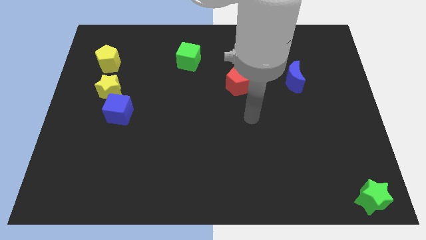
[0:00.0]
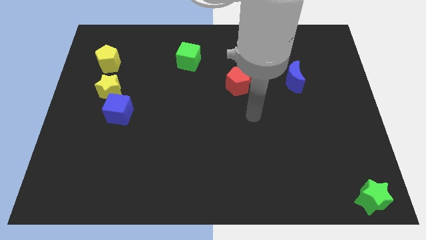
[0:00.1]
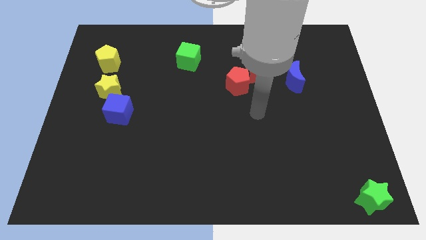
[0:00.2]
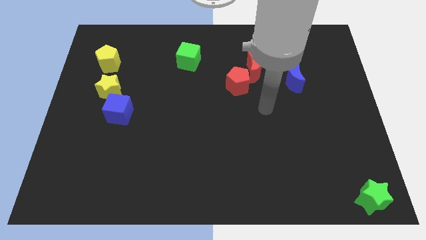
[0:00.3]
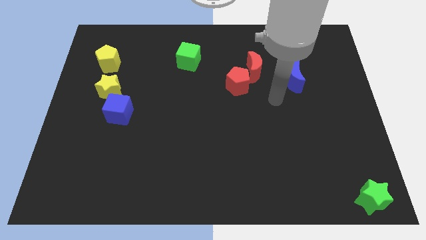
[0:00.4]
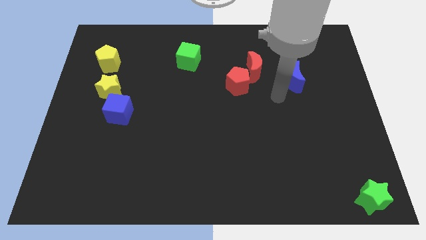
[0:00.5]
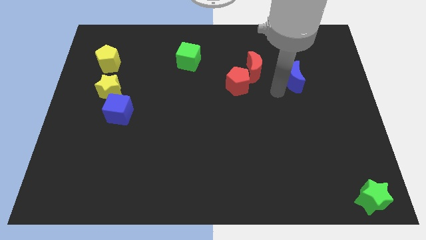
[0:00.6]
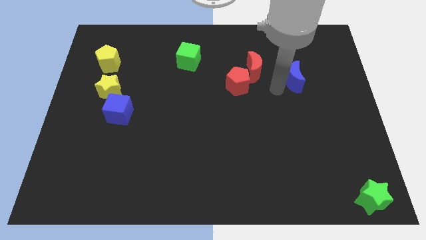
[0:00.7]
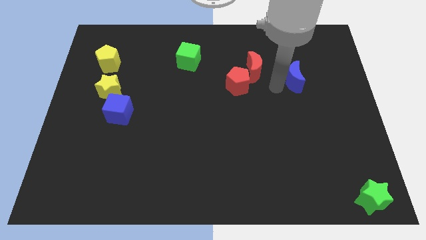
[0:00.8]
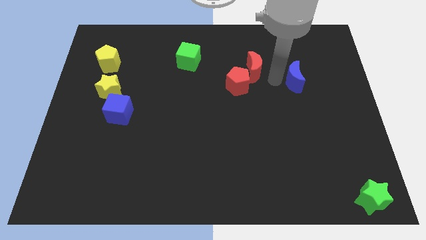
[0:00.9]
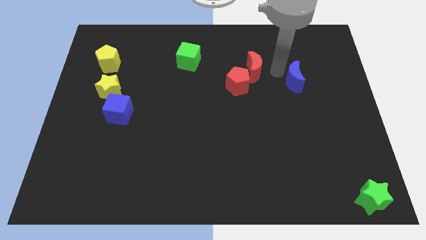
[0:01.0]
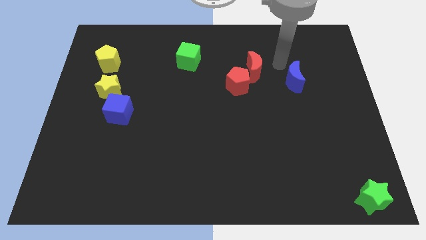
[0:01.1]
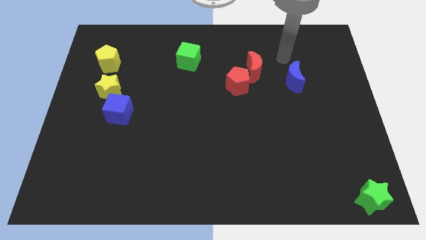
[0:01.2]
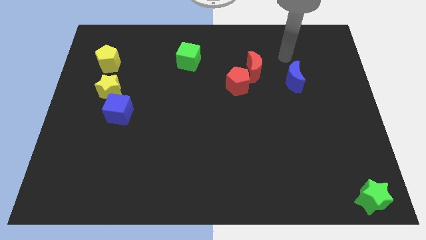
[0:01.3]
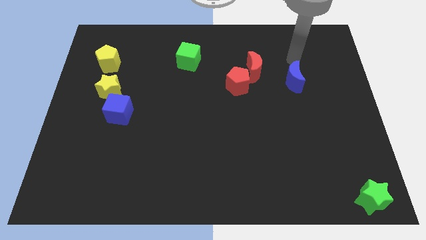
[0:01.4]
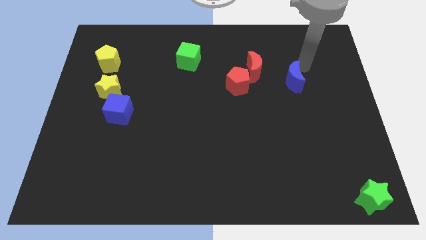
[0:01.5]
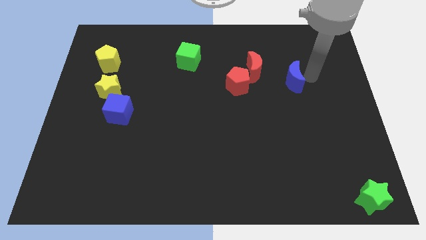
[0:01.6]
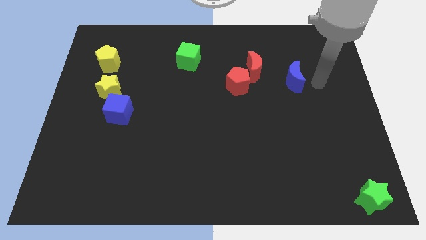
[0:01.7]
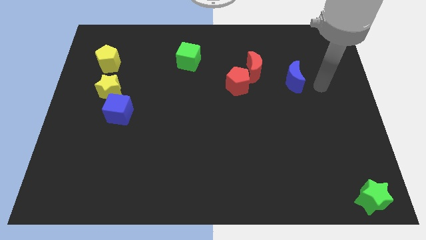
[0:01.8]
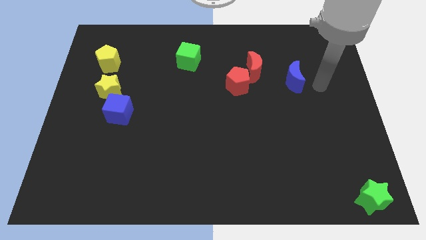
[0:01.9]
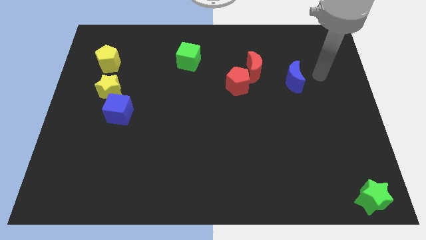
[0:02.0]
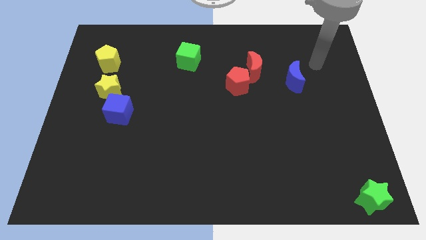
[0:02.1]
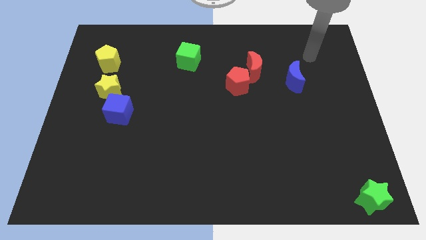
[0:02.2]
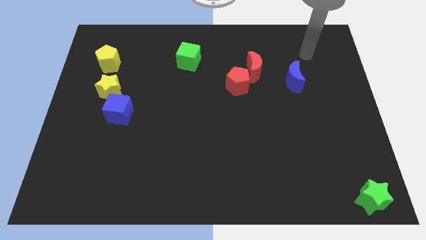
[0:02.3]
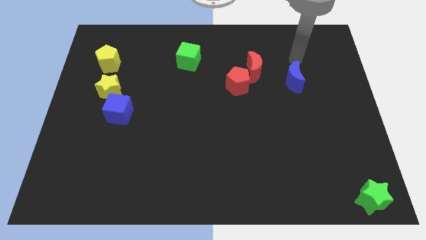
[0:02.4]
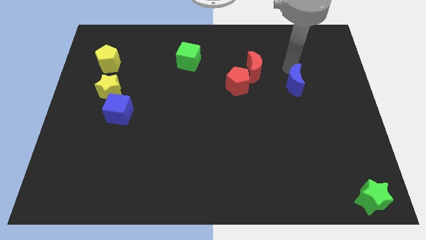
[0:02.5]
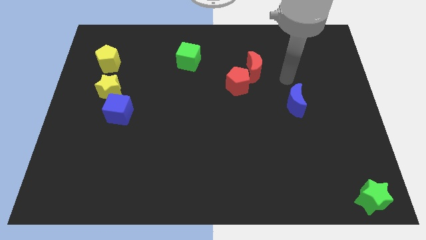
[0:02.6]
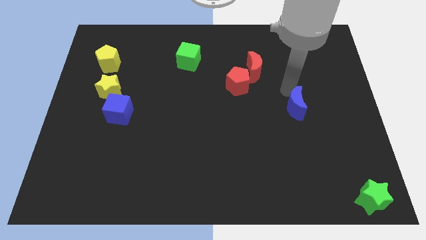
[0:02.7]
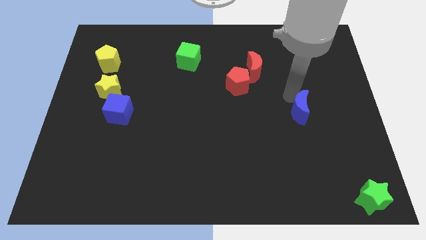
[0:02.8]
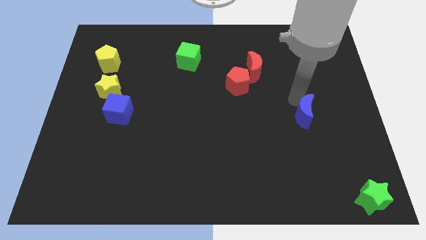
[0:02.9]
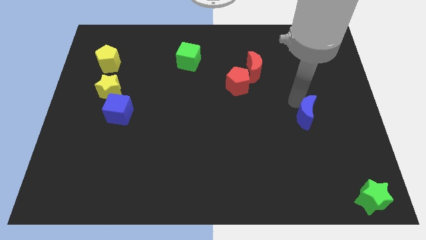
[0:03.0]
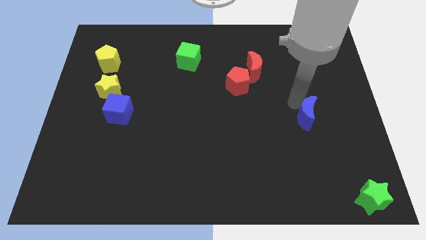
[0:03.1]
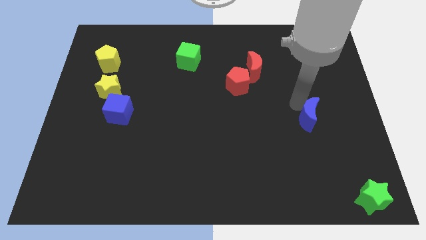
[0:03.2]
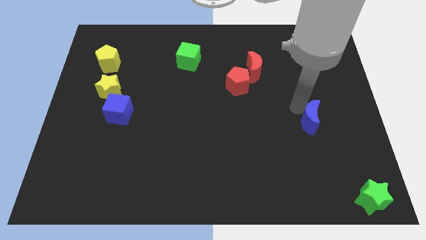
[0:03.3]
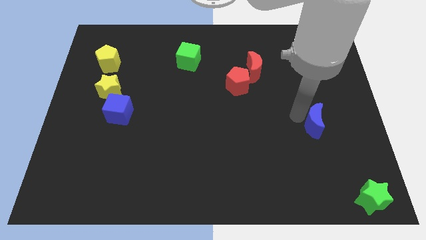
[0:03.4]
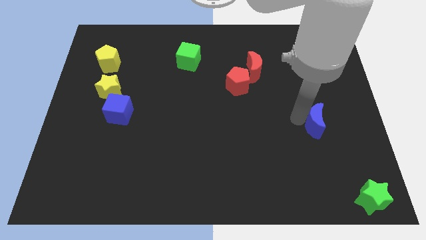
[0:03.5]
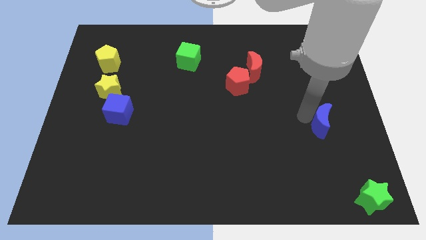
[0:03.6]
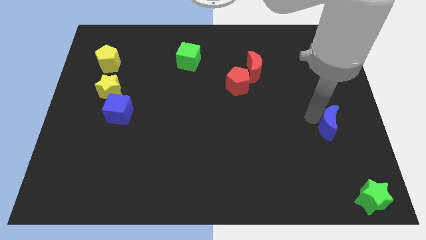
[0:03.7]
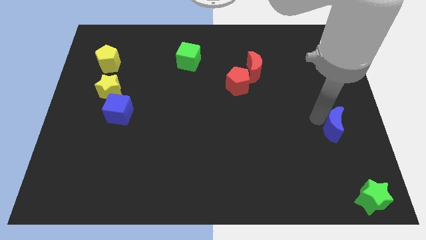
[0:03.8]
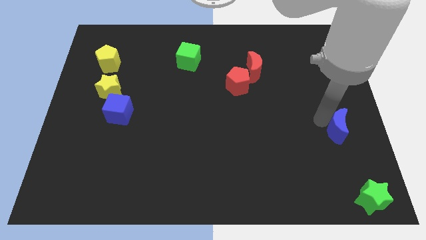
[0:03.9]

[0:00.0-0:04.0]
move the blue moon towards the right center of board

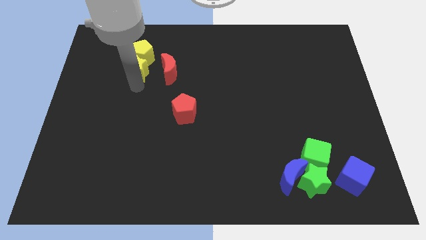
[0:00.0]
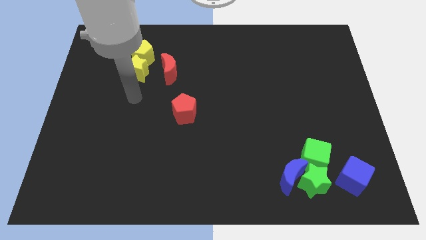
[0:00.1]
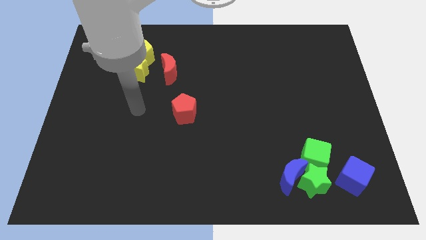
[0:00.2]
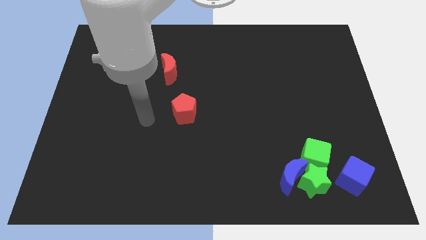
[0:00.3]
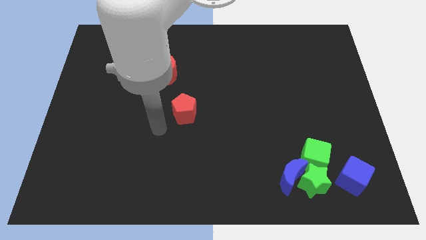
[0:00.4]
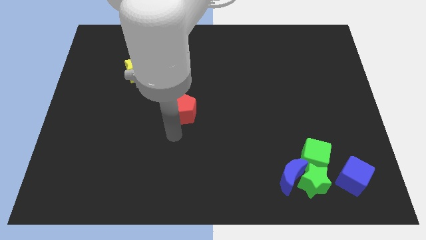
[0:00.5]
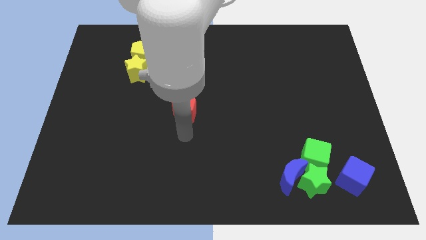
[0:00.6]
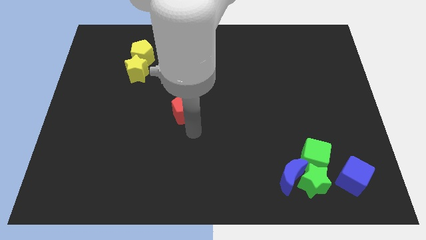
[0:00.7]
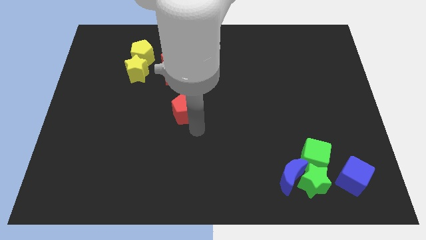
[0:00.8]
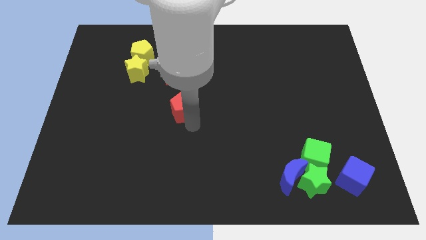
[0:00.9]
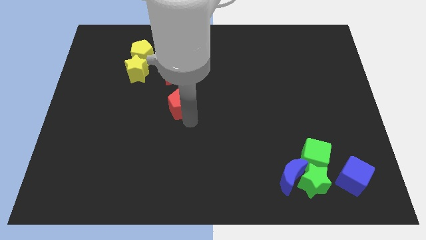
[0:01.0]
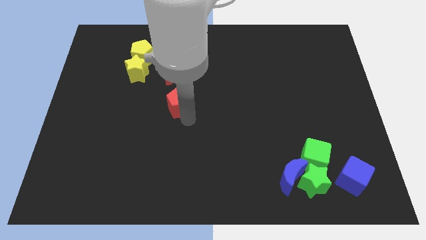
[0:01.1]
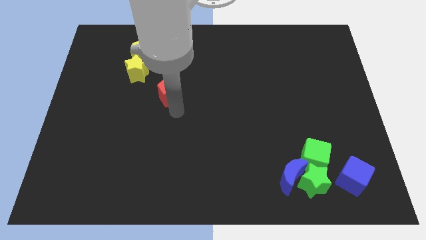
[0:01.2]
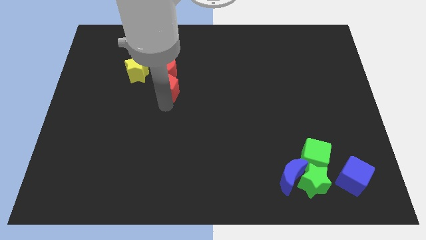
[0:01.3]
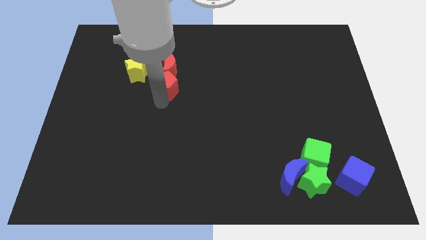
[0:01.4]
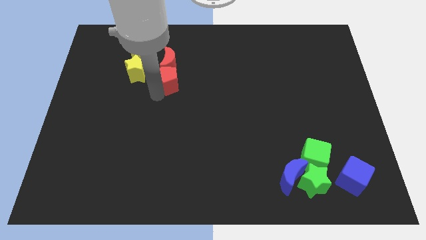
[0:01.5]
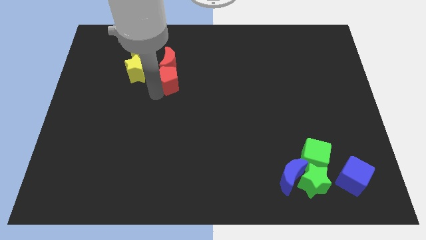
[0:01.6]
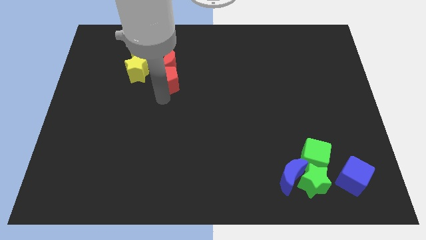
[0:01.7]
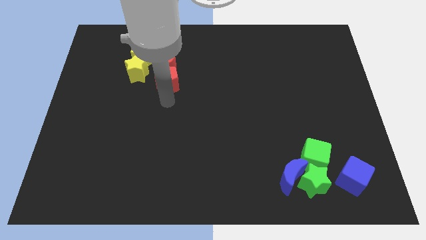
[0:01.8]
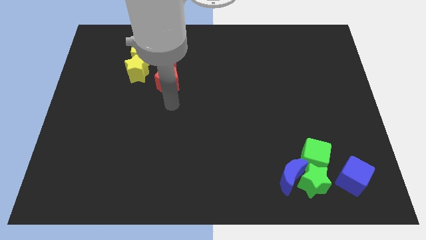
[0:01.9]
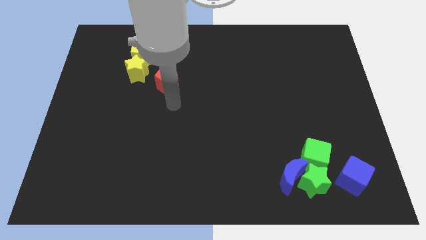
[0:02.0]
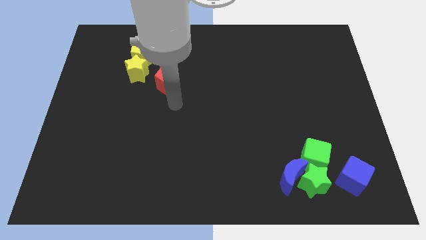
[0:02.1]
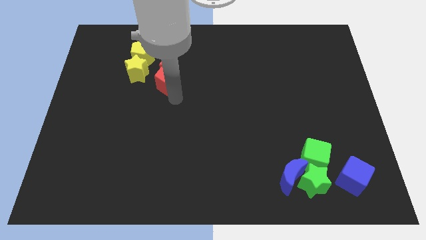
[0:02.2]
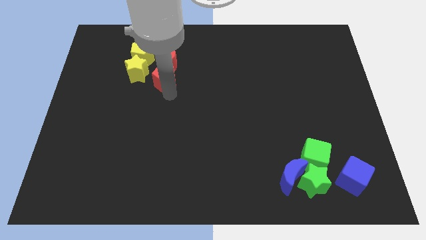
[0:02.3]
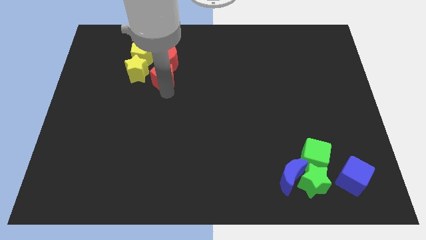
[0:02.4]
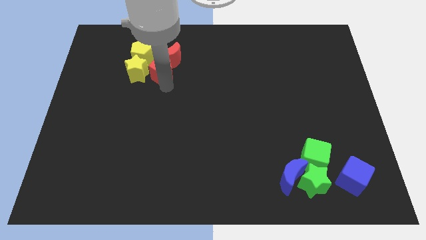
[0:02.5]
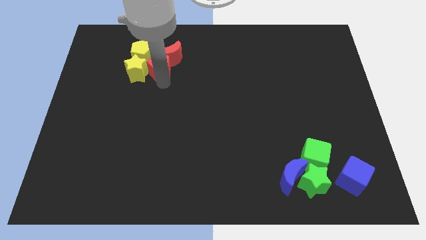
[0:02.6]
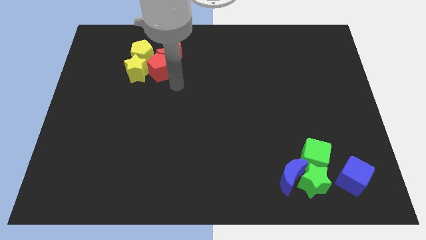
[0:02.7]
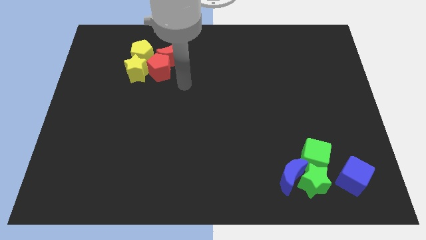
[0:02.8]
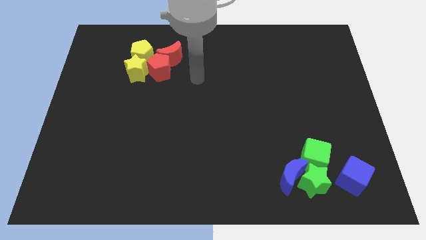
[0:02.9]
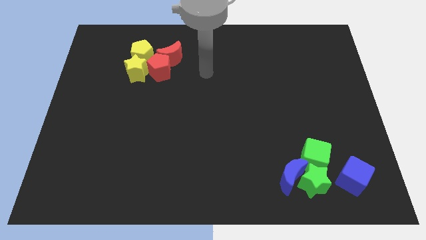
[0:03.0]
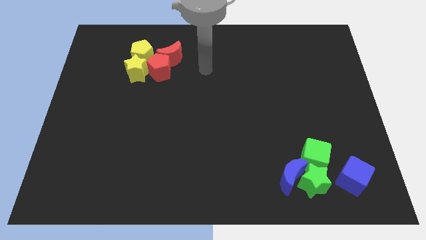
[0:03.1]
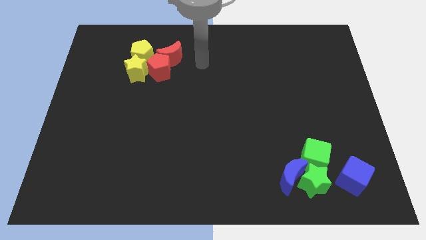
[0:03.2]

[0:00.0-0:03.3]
move the red pentagon into the group of blocks

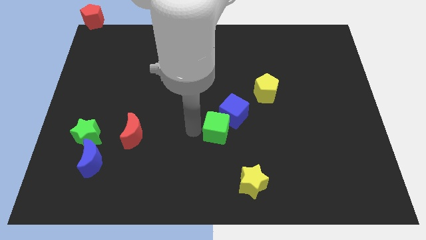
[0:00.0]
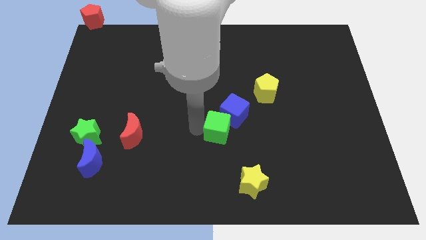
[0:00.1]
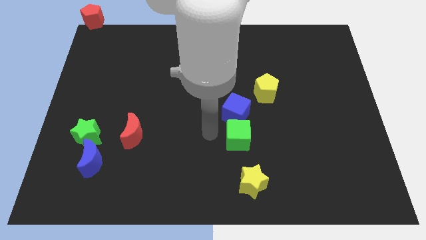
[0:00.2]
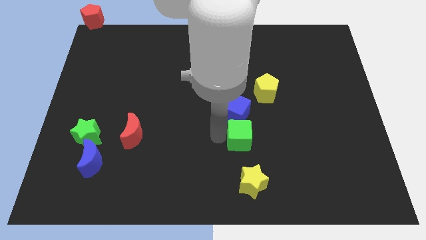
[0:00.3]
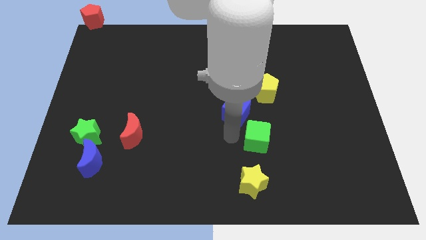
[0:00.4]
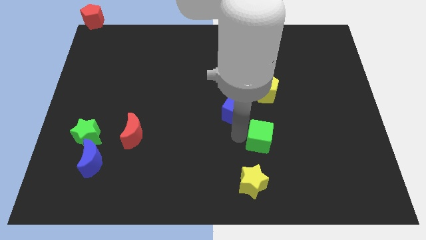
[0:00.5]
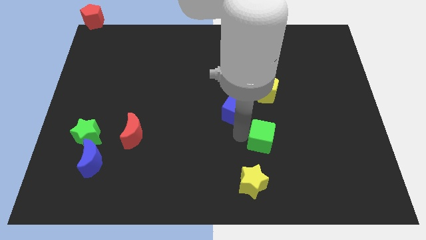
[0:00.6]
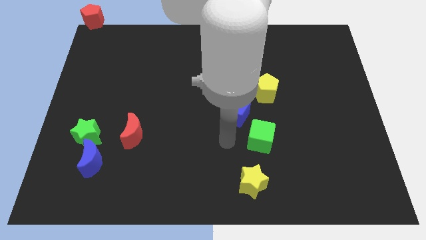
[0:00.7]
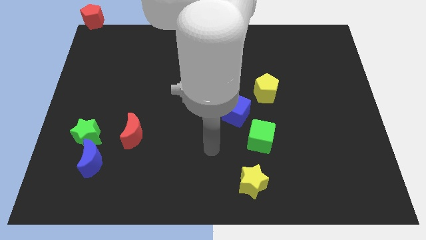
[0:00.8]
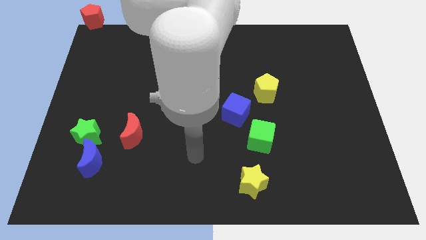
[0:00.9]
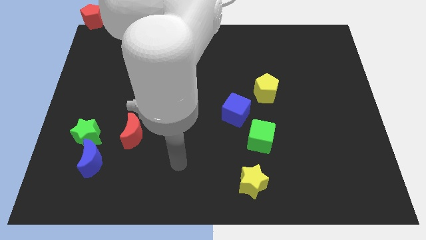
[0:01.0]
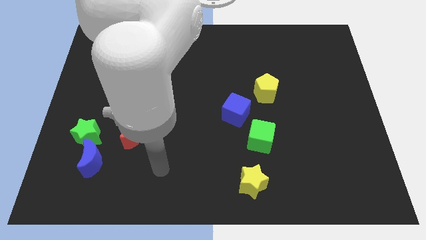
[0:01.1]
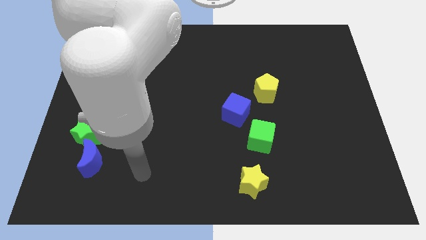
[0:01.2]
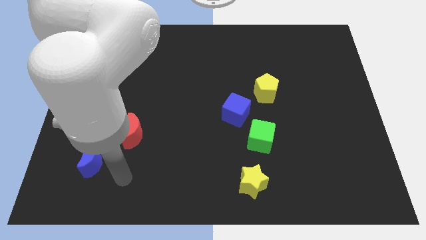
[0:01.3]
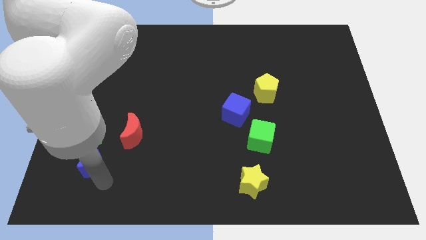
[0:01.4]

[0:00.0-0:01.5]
drag green cube diagonally bottom right to the blue cube

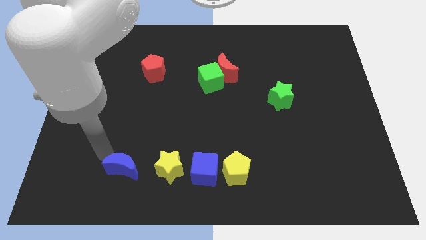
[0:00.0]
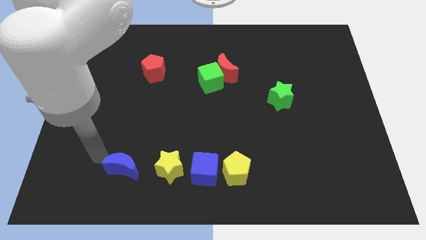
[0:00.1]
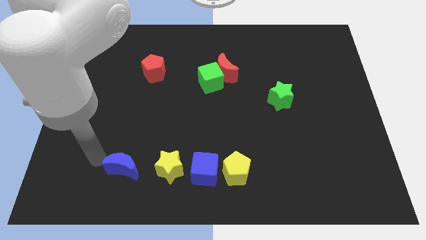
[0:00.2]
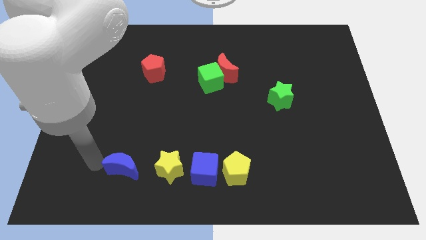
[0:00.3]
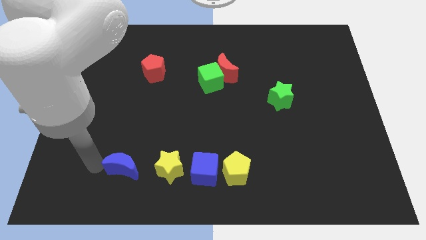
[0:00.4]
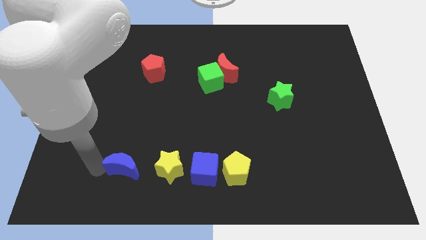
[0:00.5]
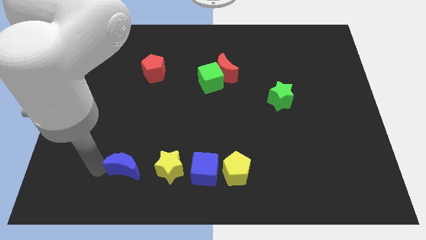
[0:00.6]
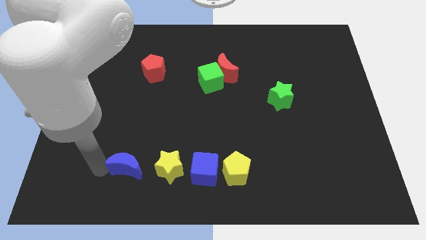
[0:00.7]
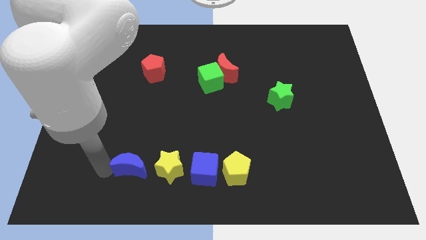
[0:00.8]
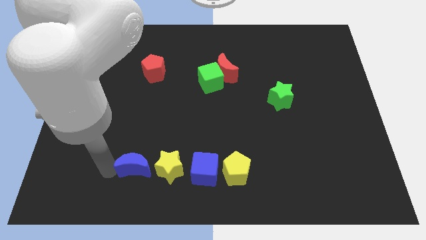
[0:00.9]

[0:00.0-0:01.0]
push the blue crescent close to the yellow star
